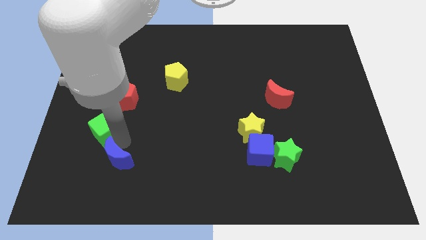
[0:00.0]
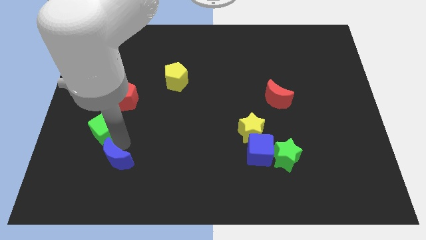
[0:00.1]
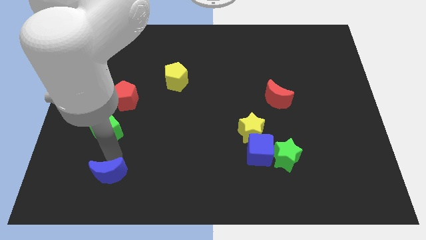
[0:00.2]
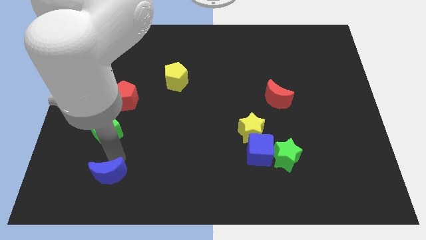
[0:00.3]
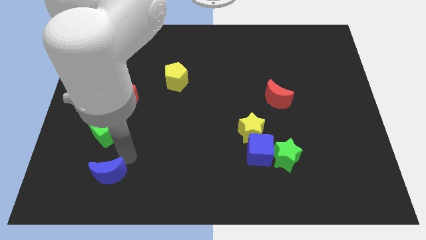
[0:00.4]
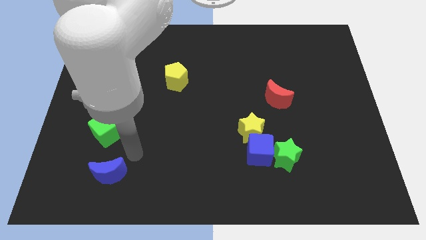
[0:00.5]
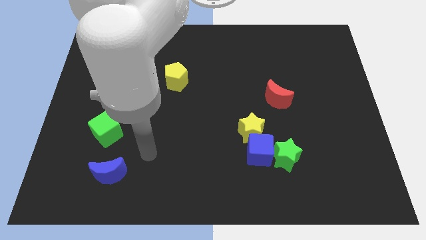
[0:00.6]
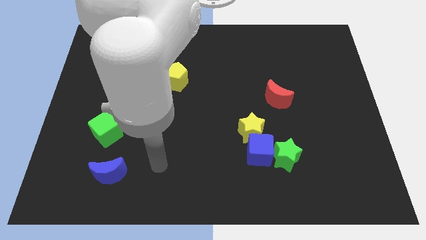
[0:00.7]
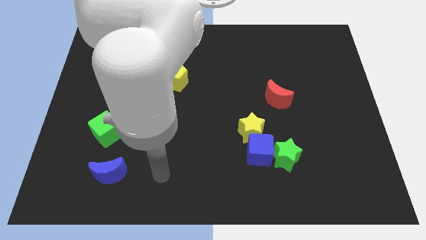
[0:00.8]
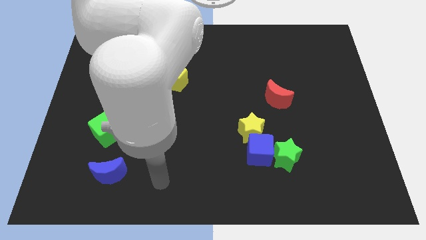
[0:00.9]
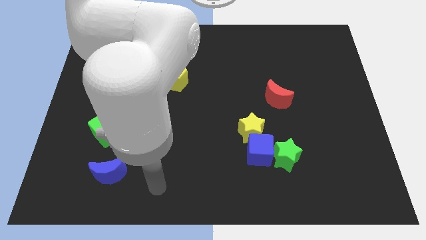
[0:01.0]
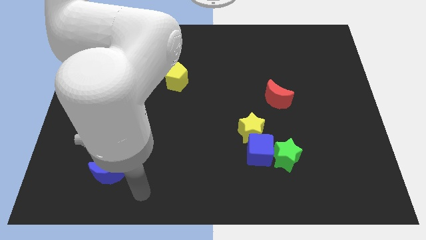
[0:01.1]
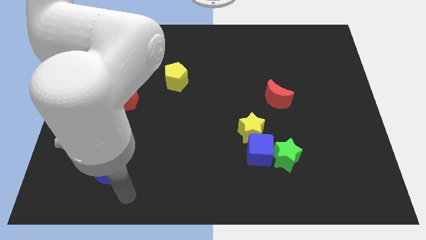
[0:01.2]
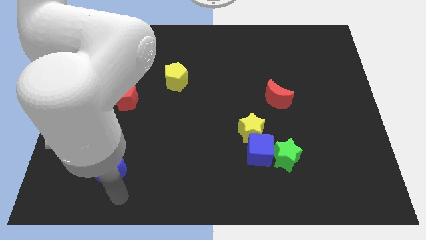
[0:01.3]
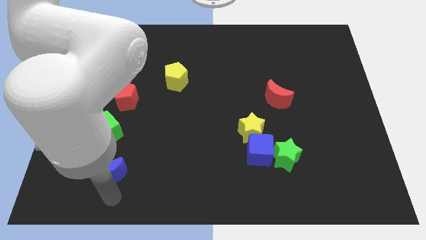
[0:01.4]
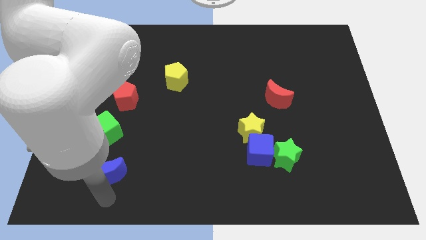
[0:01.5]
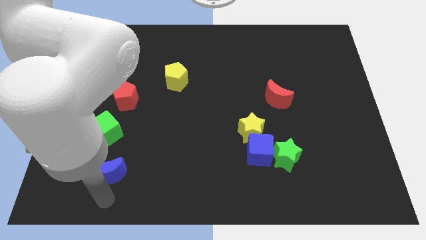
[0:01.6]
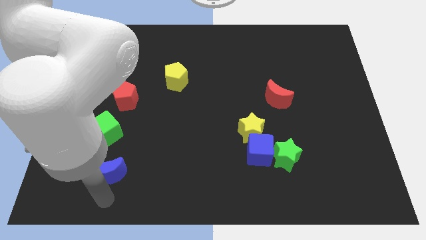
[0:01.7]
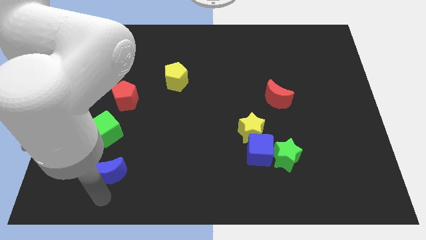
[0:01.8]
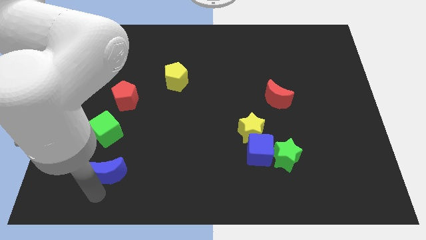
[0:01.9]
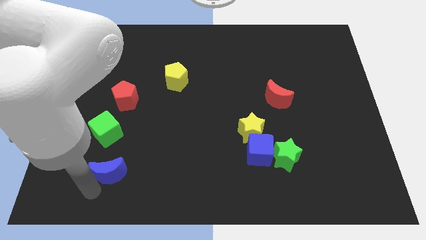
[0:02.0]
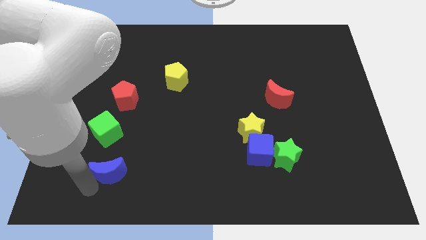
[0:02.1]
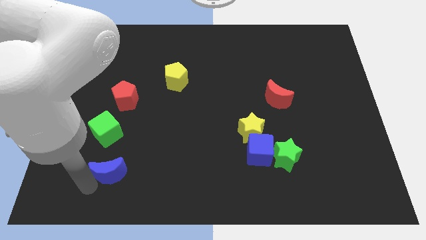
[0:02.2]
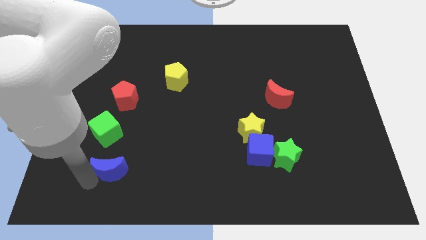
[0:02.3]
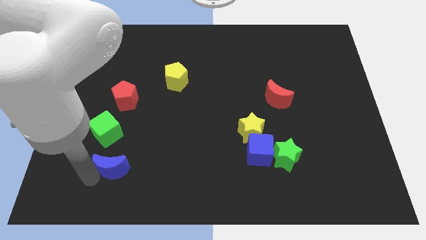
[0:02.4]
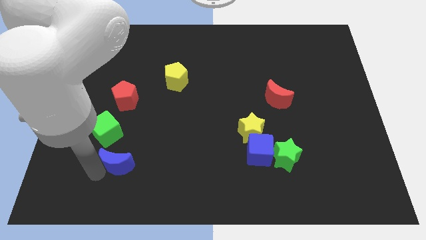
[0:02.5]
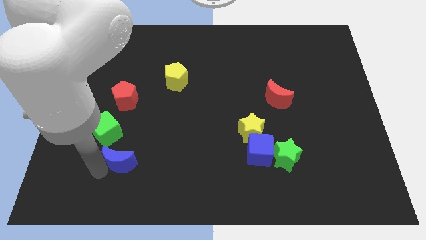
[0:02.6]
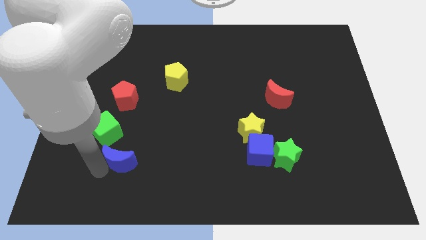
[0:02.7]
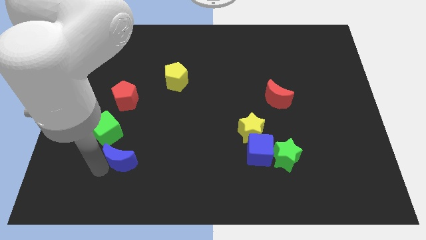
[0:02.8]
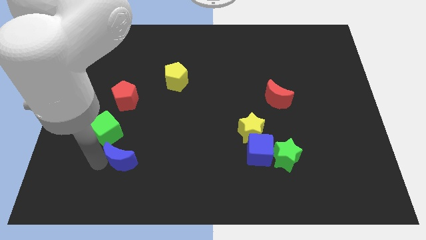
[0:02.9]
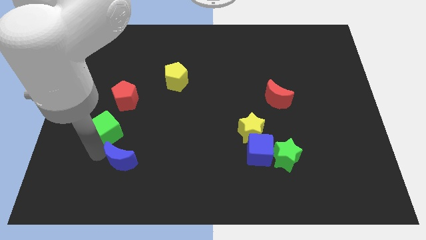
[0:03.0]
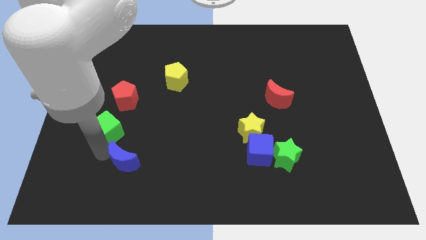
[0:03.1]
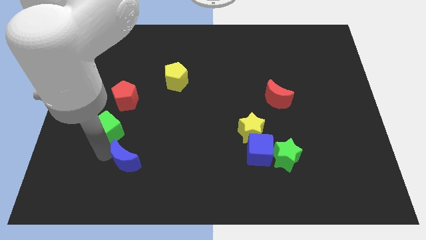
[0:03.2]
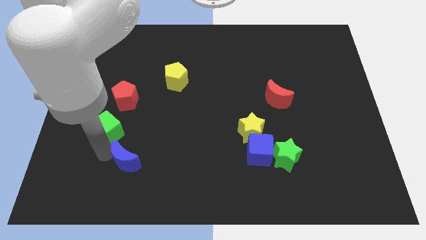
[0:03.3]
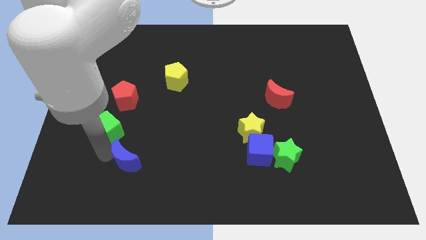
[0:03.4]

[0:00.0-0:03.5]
move the blue crescent diagonally to the bottom right of the green cube

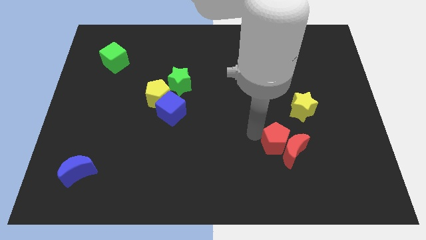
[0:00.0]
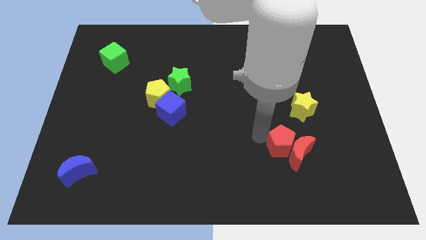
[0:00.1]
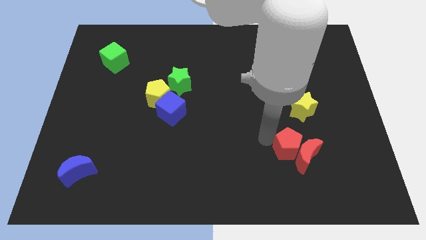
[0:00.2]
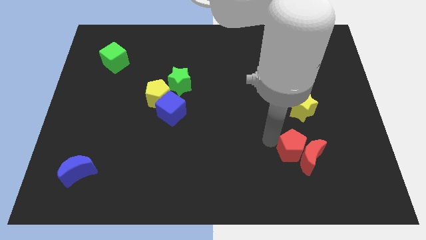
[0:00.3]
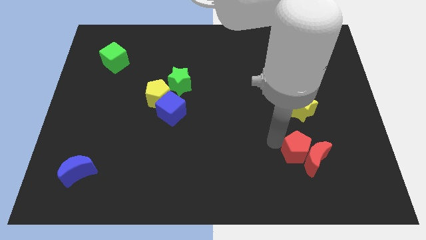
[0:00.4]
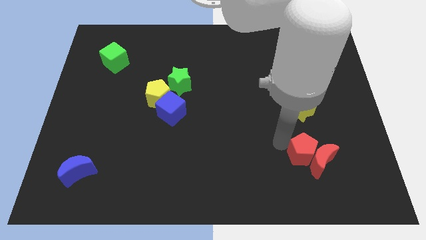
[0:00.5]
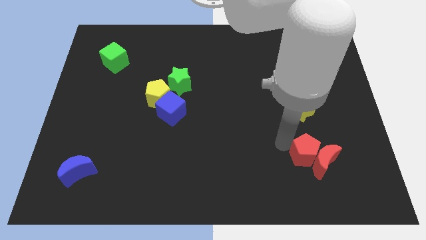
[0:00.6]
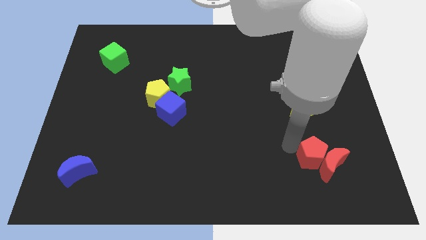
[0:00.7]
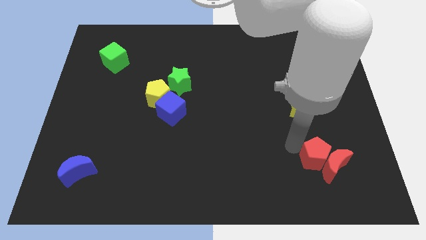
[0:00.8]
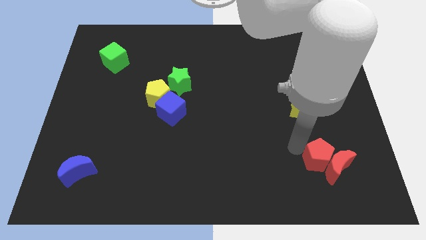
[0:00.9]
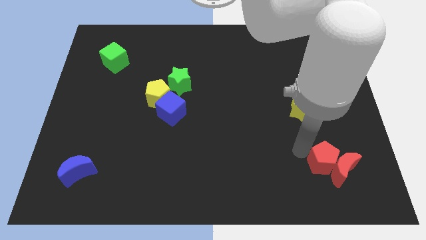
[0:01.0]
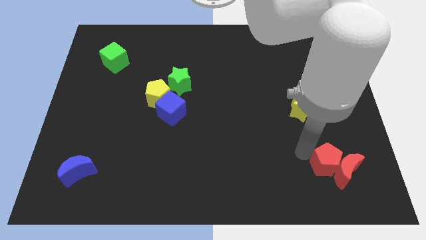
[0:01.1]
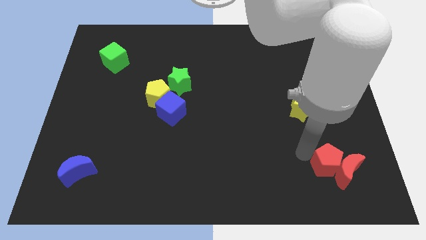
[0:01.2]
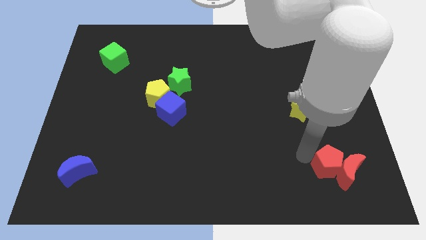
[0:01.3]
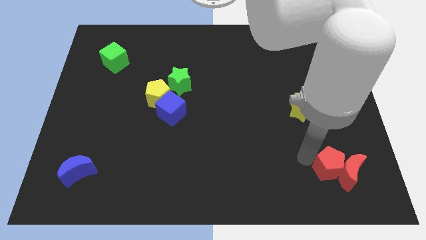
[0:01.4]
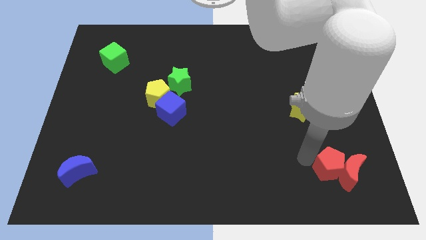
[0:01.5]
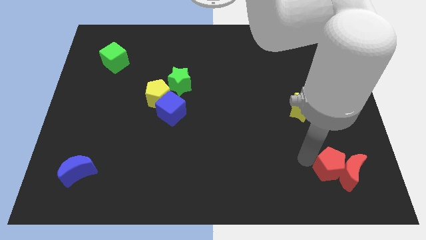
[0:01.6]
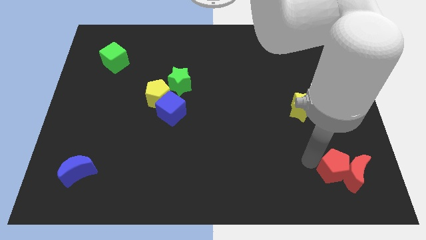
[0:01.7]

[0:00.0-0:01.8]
move red pentagon along with red crescent horizontally

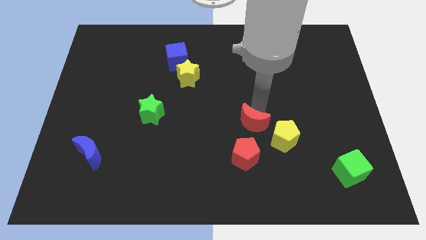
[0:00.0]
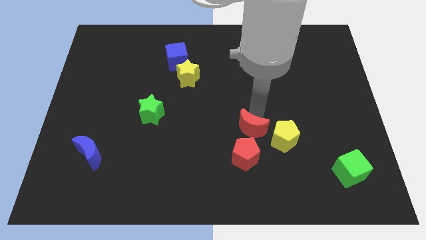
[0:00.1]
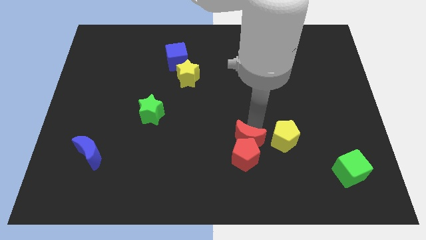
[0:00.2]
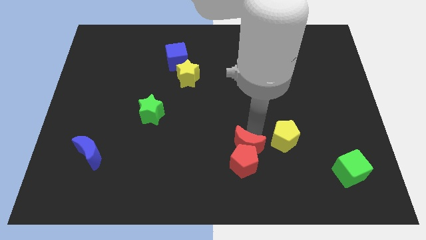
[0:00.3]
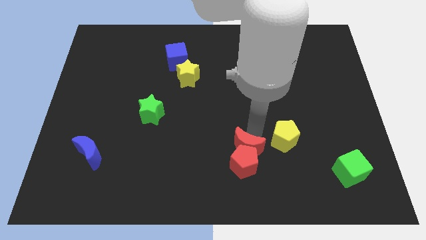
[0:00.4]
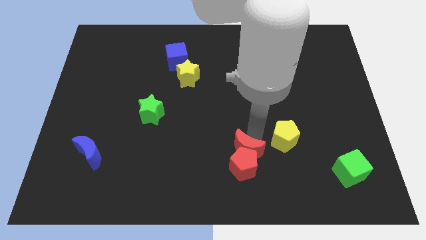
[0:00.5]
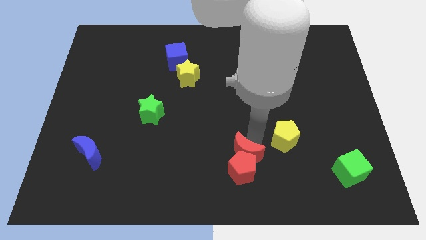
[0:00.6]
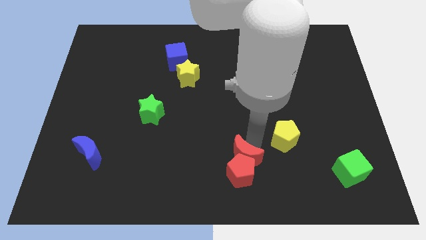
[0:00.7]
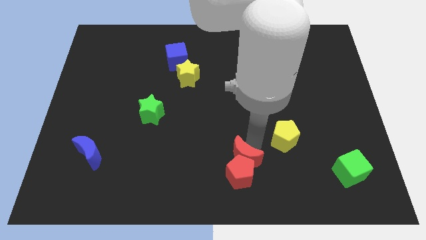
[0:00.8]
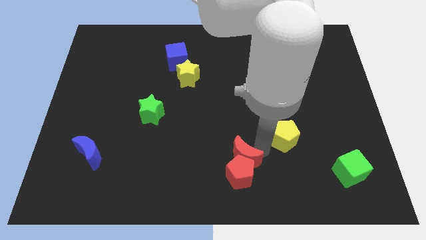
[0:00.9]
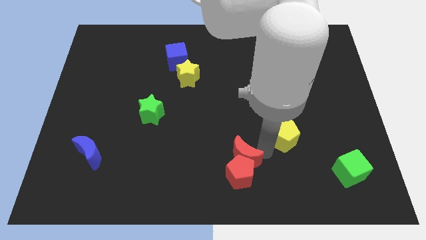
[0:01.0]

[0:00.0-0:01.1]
push the red pentagon with the red crescent

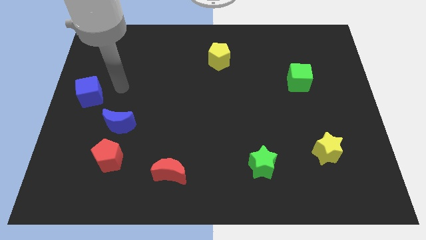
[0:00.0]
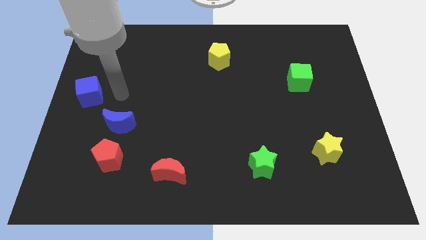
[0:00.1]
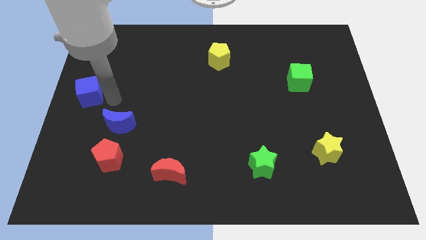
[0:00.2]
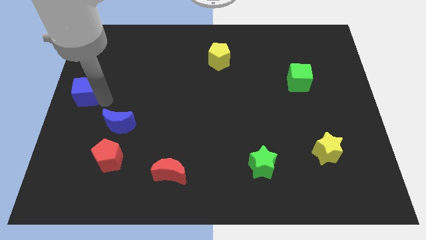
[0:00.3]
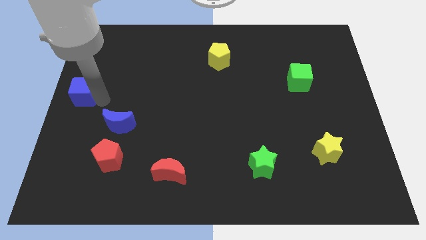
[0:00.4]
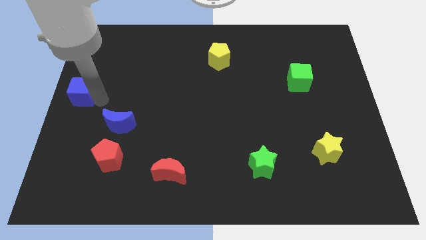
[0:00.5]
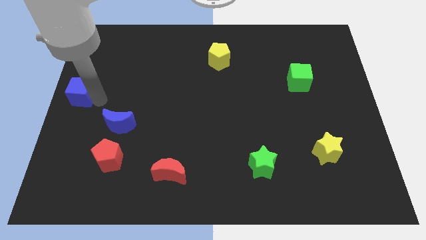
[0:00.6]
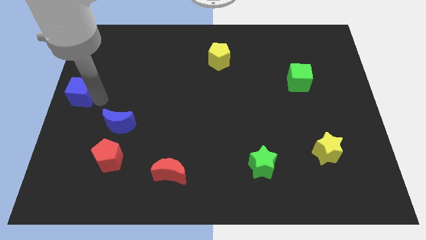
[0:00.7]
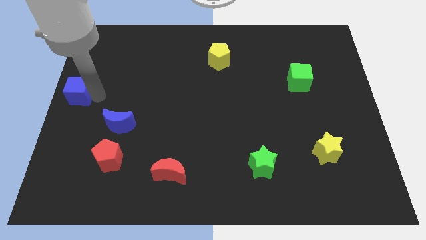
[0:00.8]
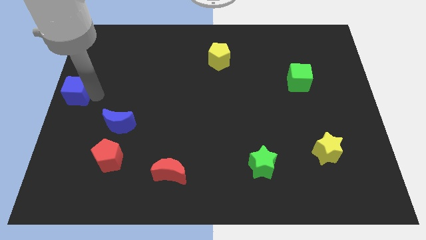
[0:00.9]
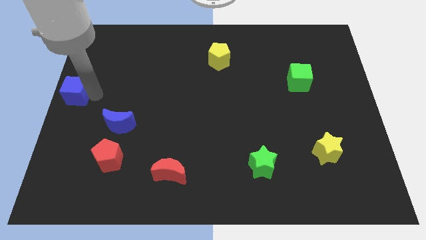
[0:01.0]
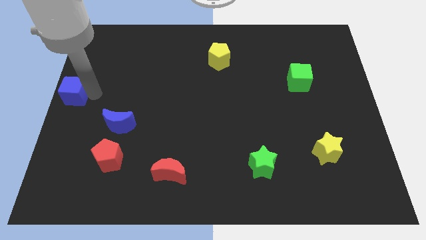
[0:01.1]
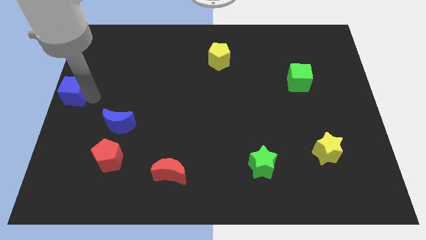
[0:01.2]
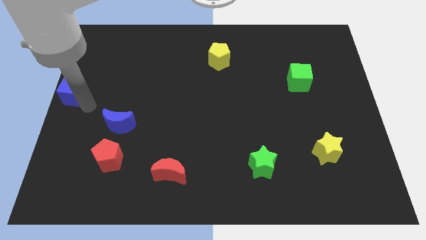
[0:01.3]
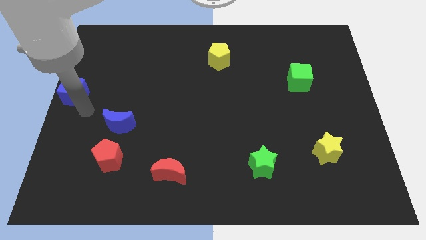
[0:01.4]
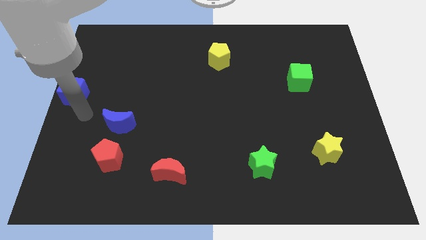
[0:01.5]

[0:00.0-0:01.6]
push the blue cube to the center left

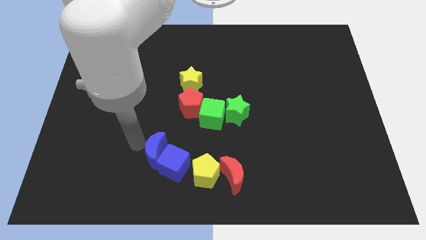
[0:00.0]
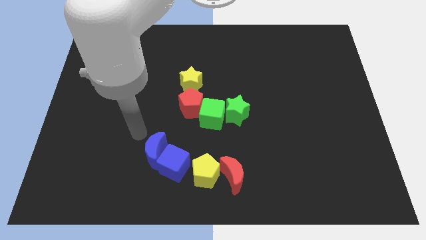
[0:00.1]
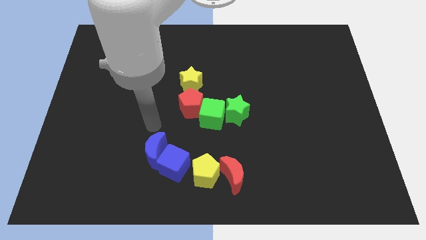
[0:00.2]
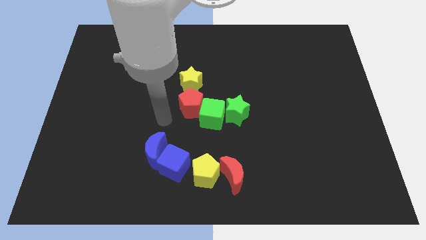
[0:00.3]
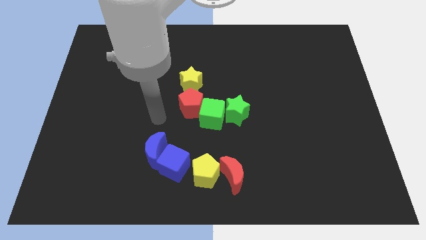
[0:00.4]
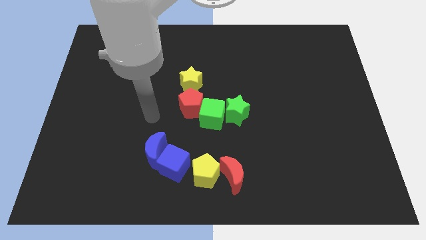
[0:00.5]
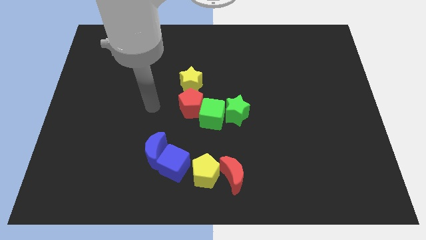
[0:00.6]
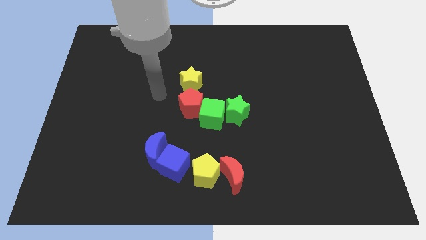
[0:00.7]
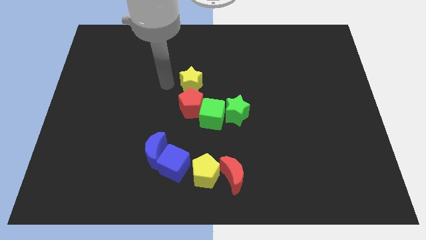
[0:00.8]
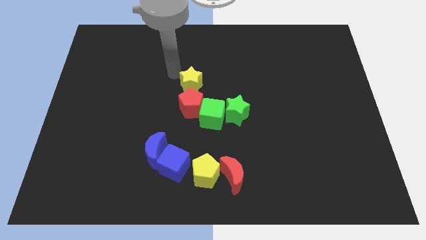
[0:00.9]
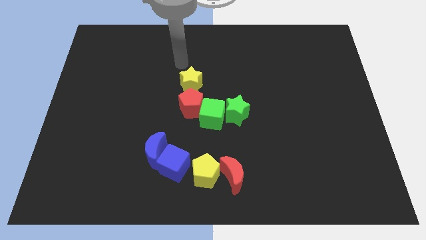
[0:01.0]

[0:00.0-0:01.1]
move your arm away from the blue moon
